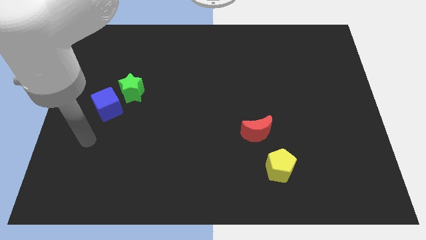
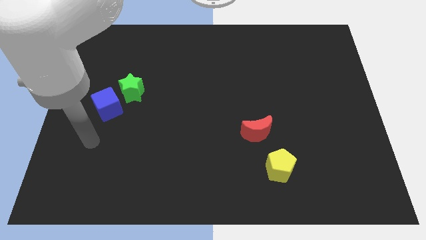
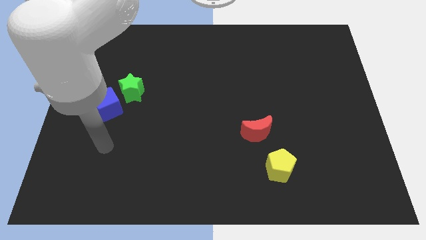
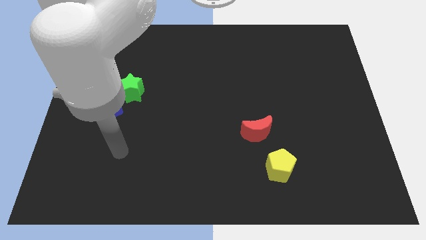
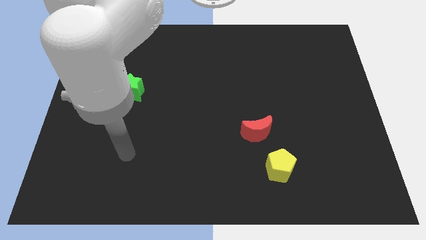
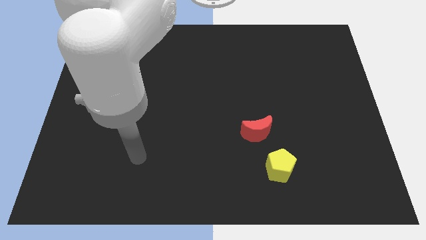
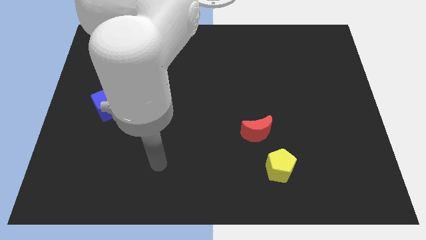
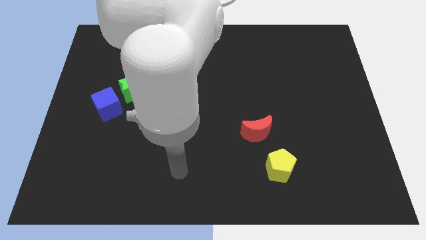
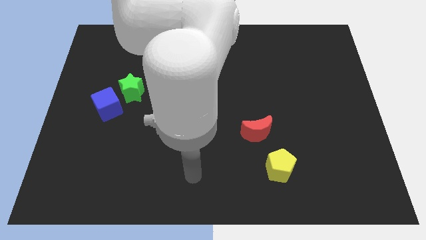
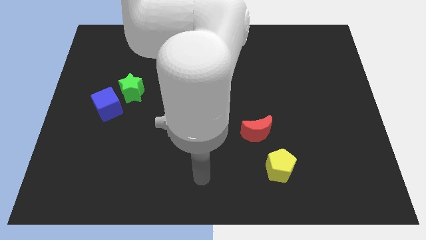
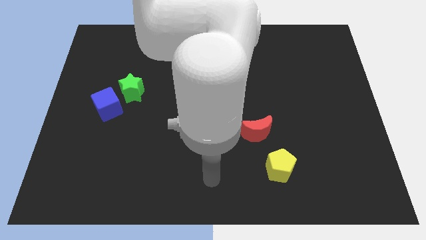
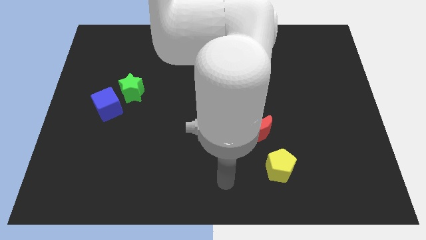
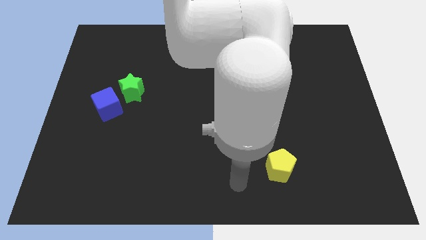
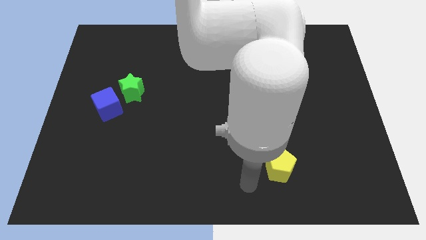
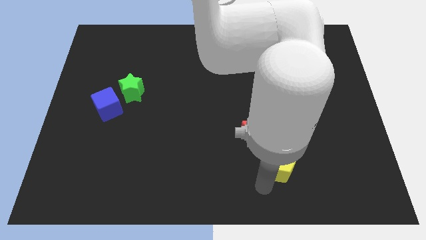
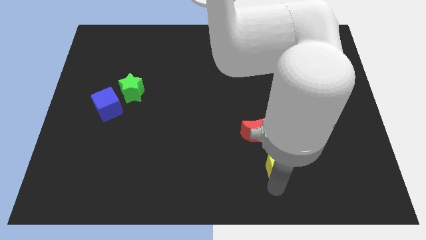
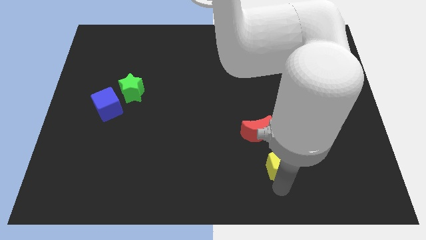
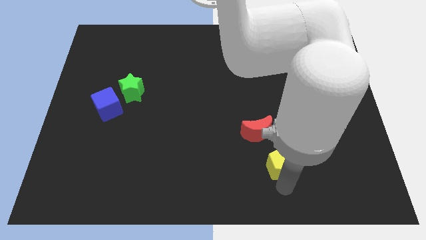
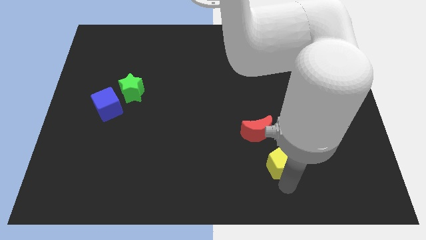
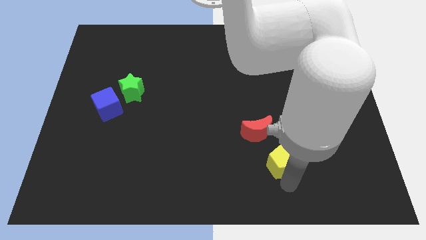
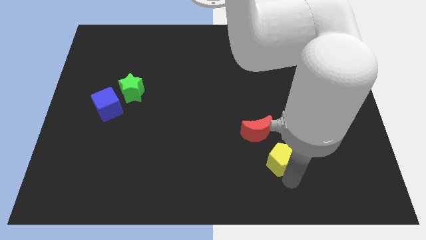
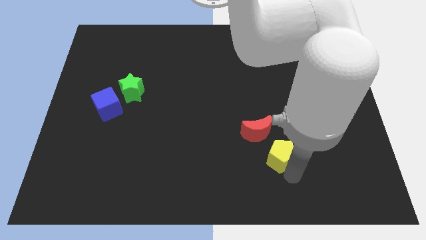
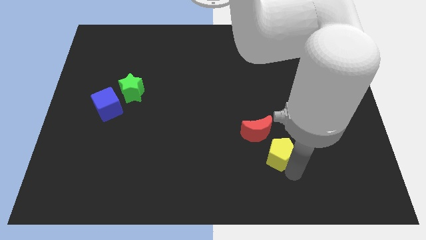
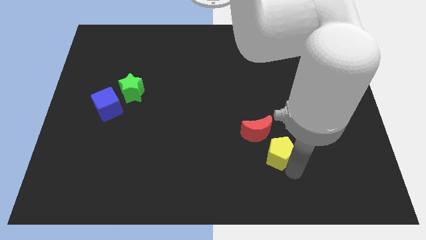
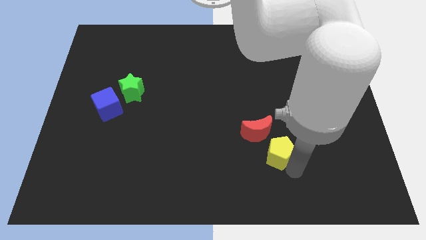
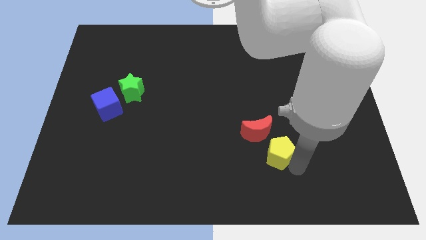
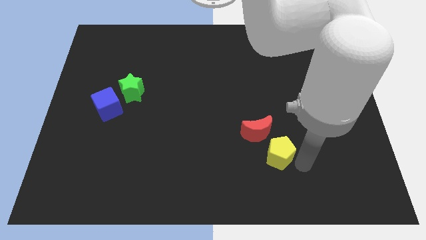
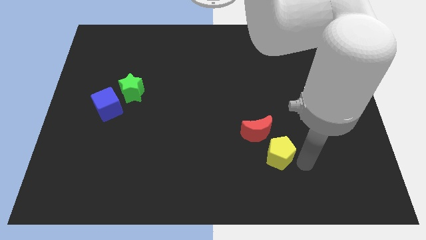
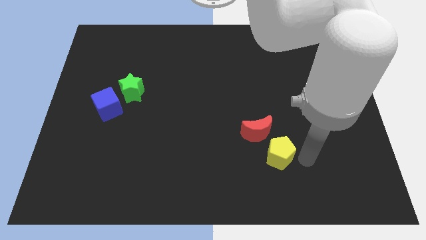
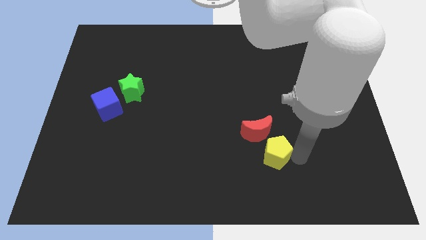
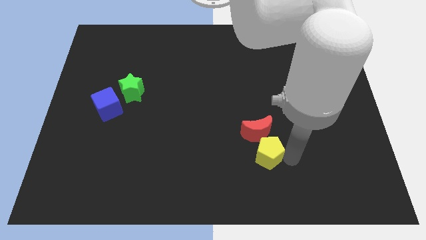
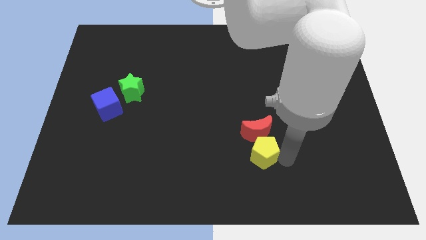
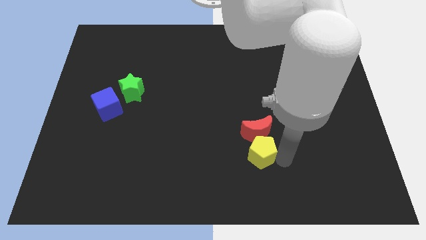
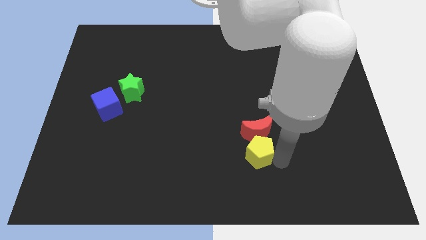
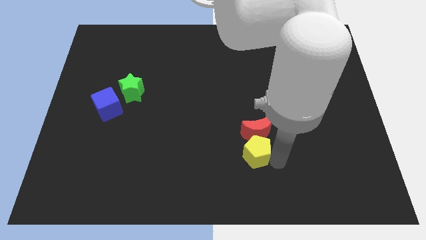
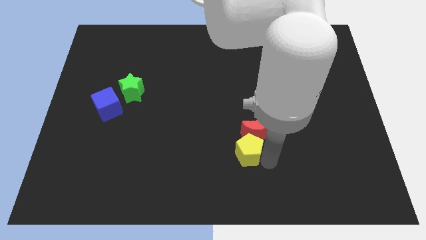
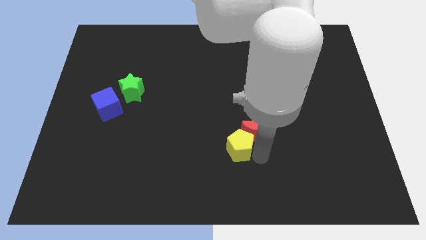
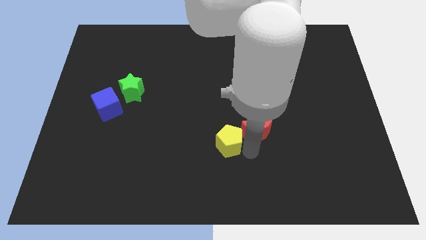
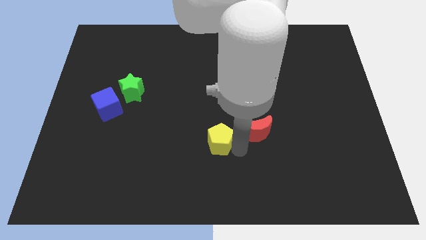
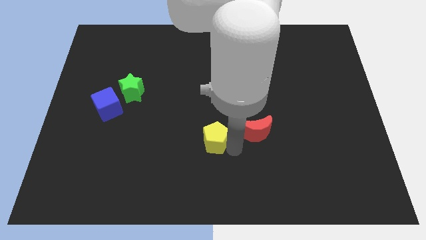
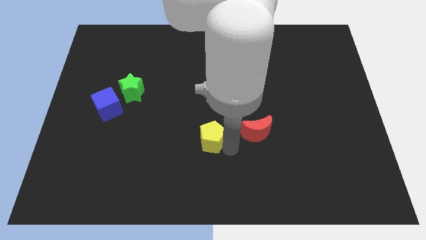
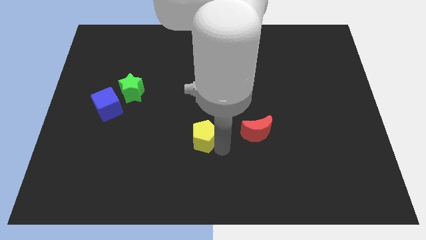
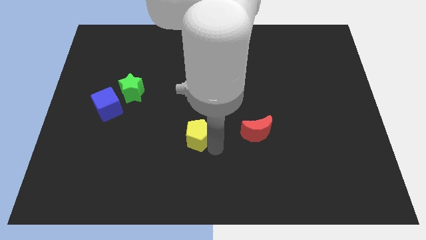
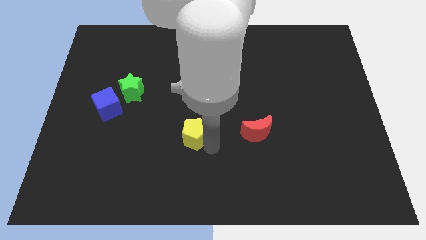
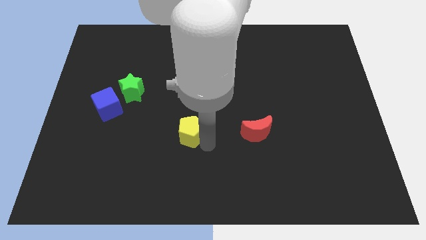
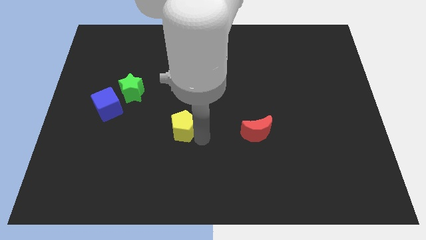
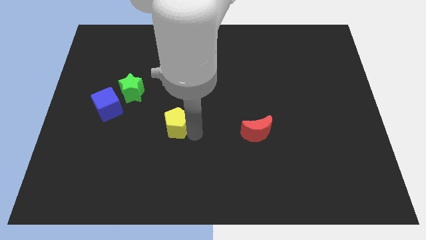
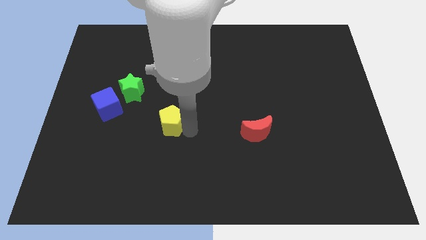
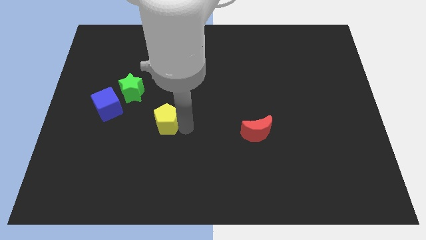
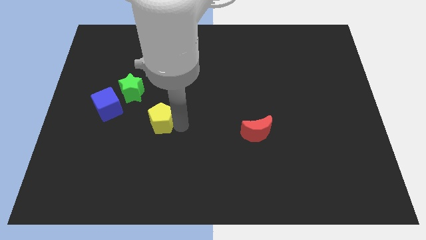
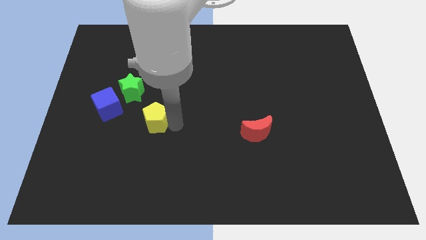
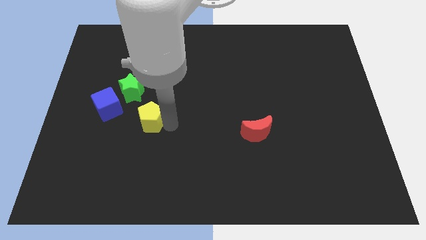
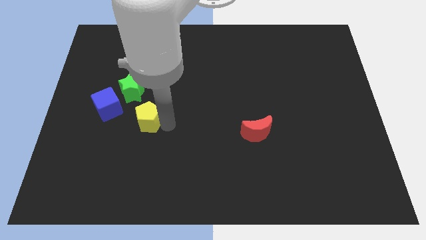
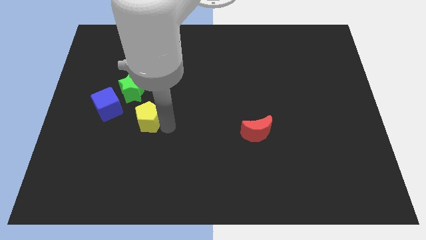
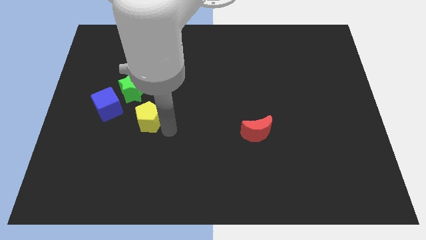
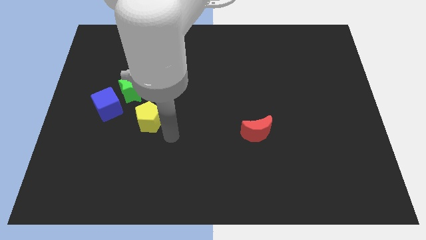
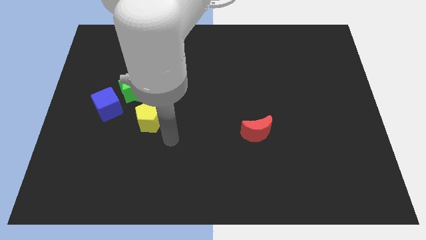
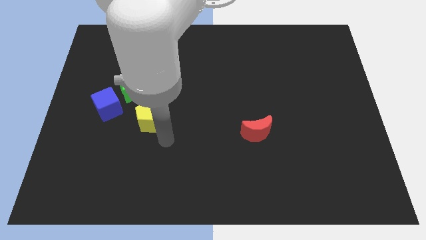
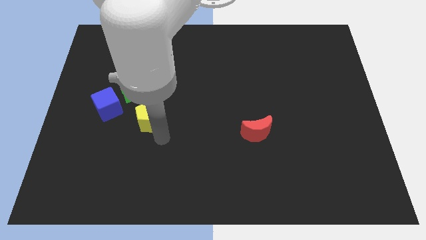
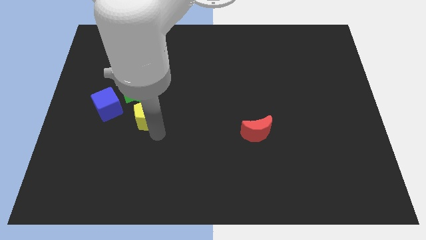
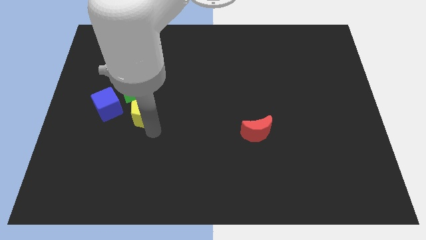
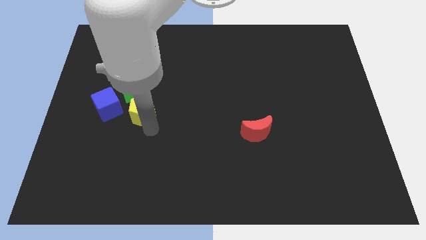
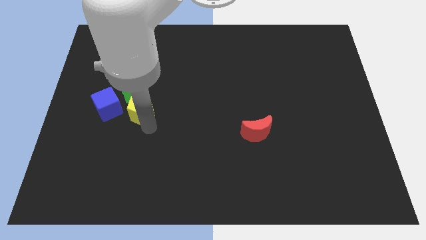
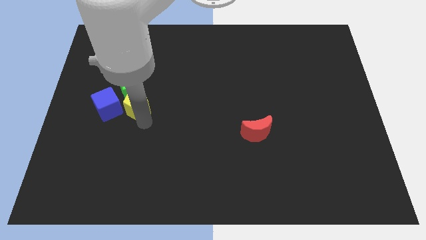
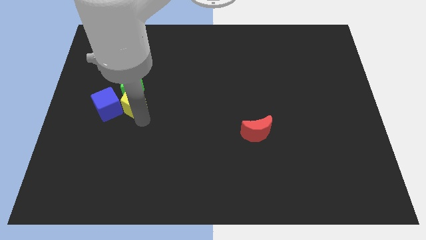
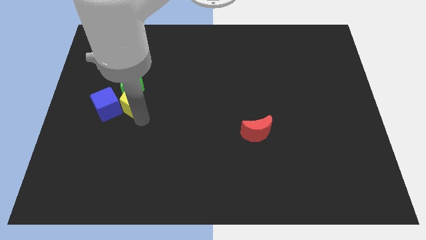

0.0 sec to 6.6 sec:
put the yellow block to the star

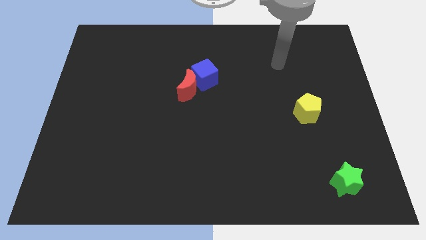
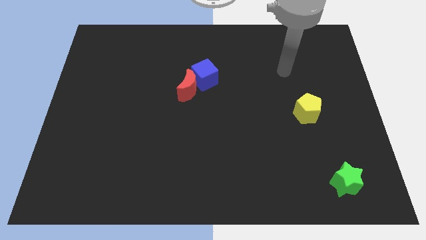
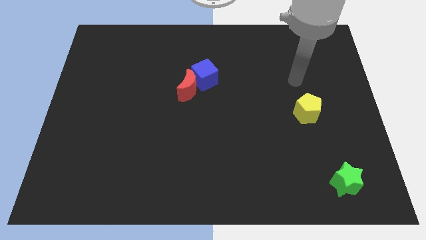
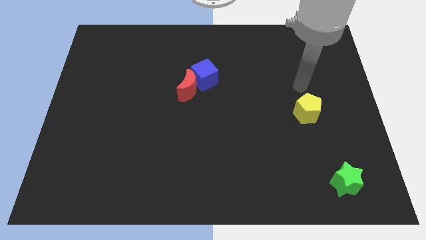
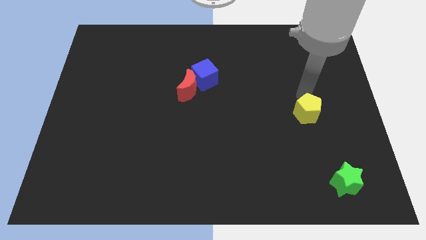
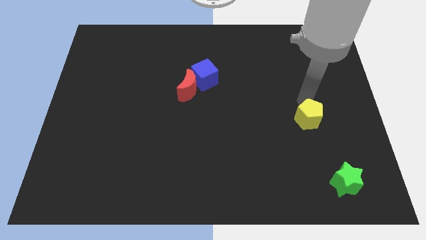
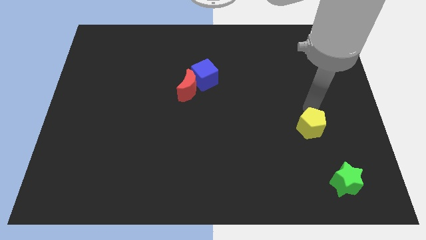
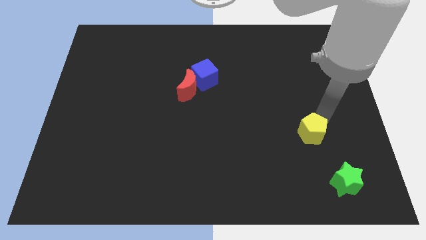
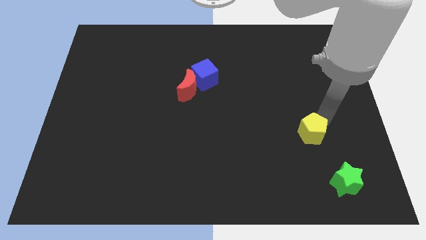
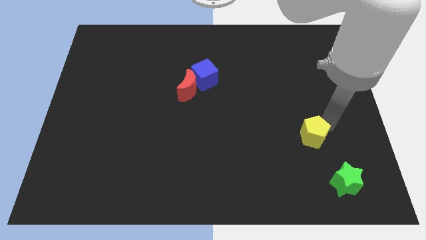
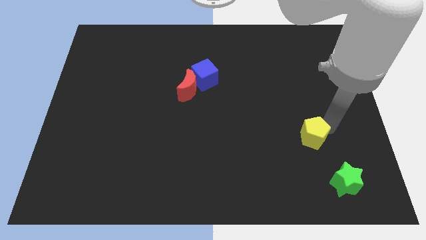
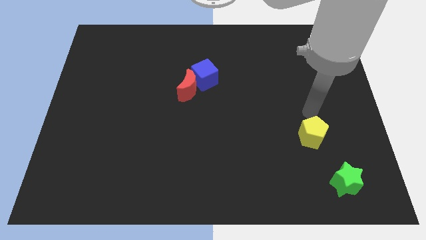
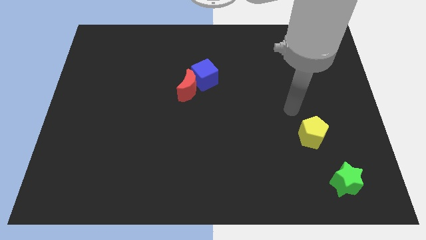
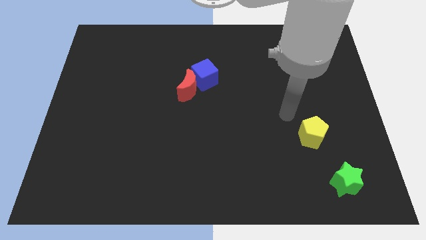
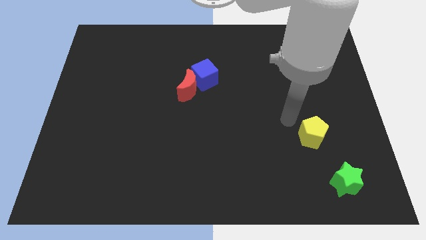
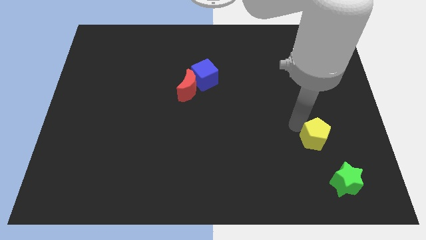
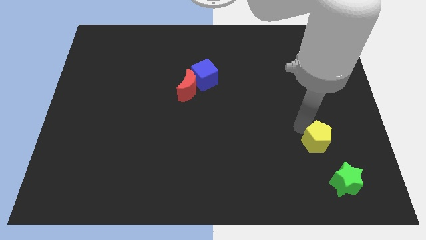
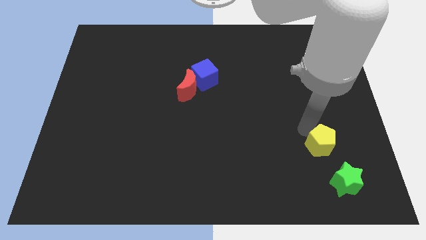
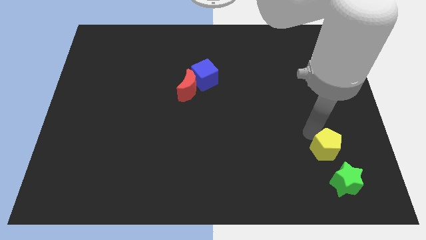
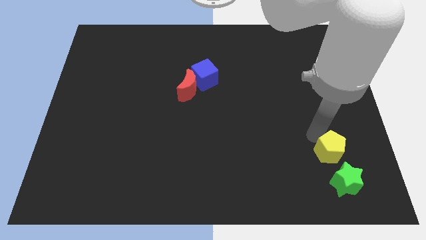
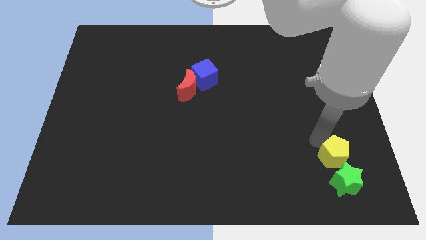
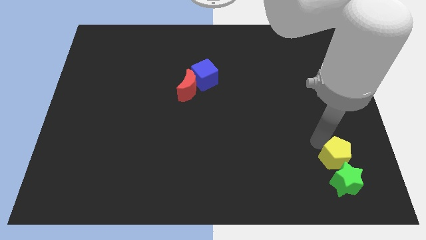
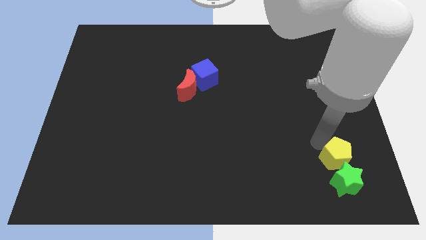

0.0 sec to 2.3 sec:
slide the yellow block to the star
